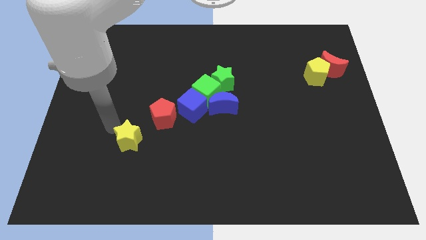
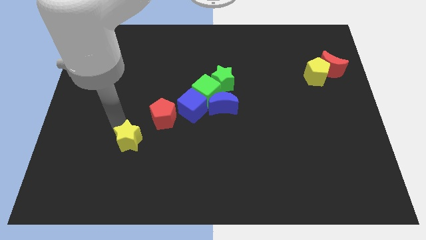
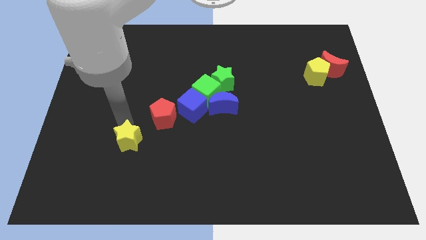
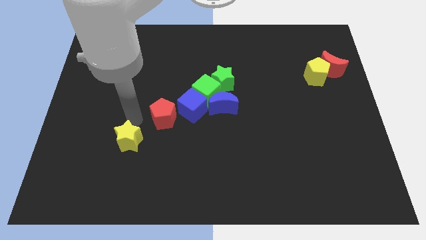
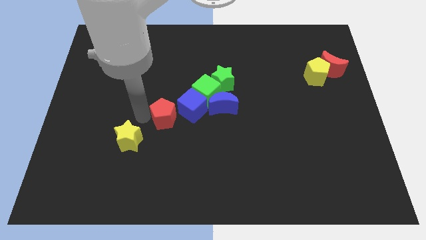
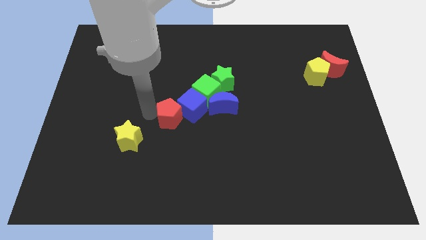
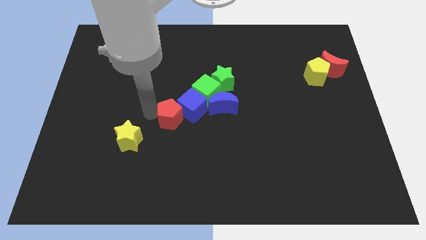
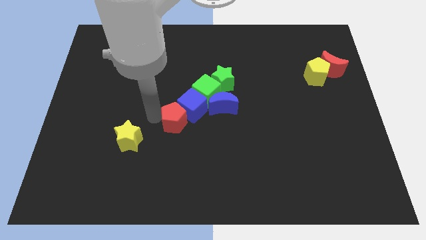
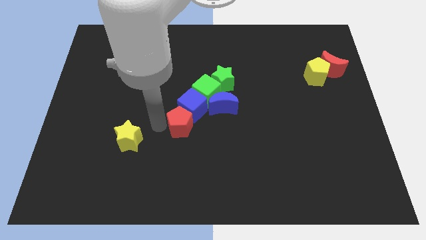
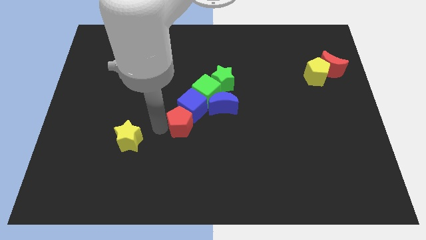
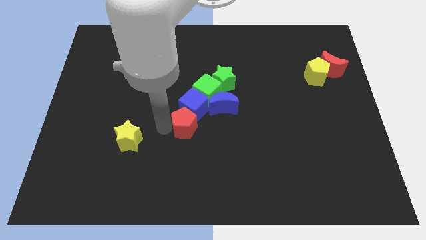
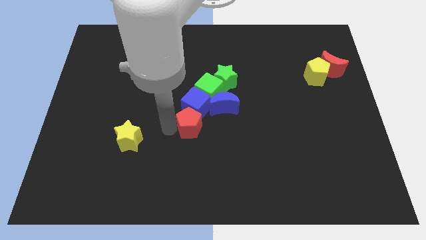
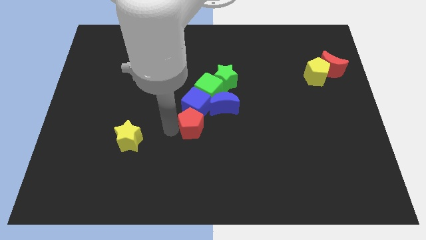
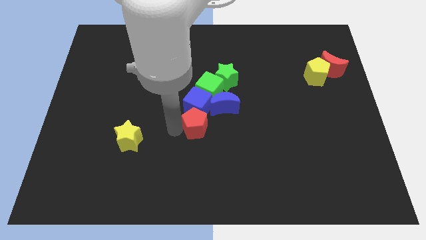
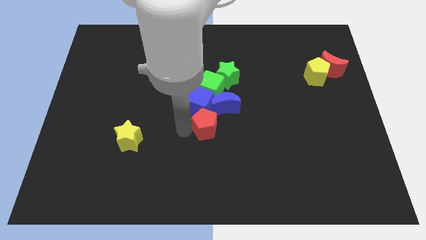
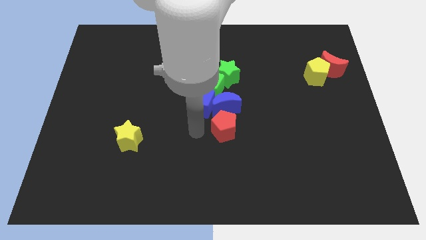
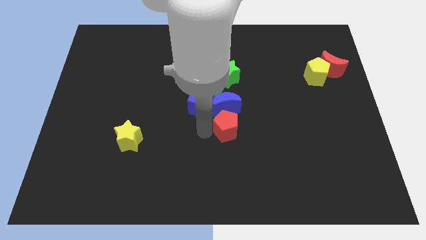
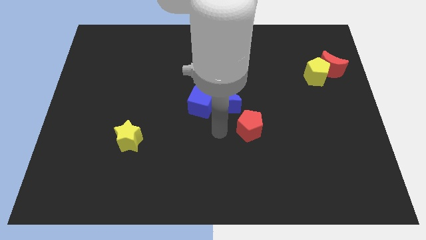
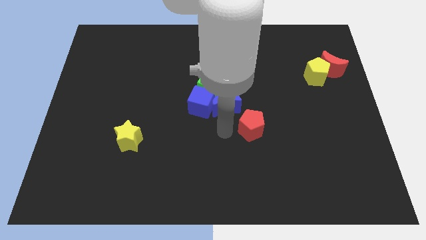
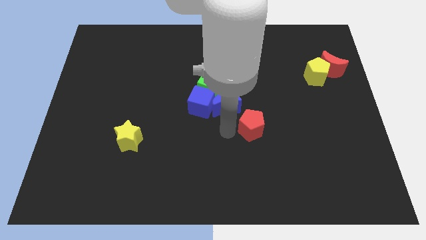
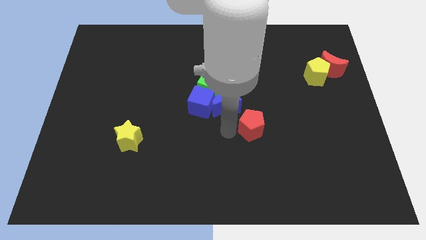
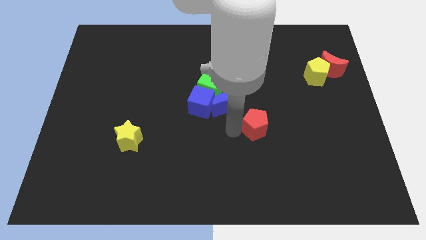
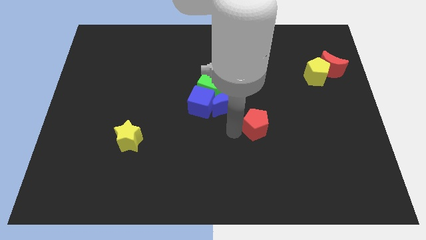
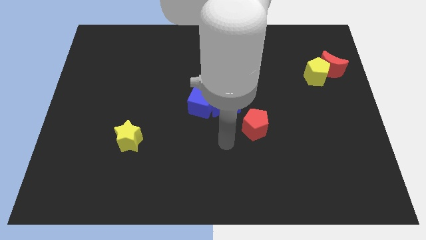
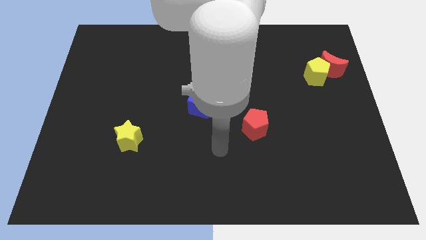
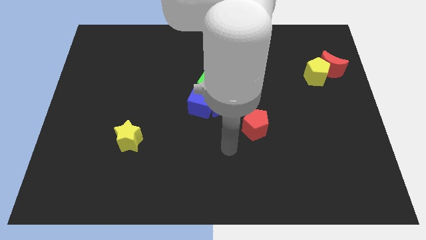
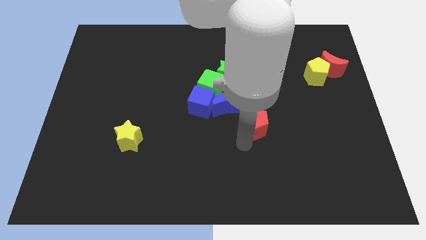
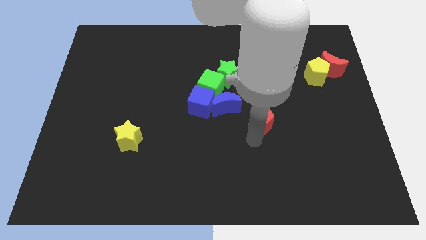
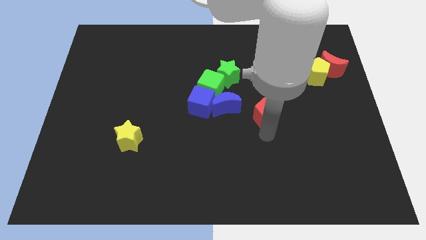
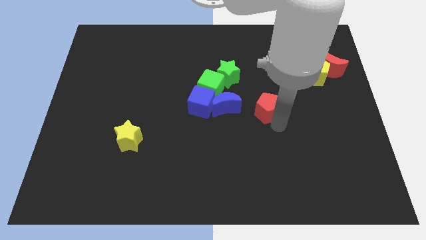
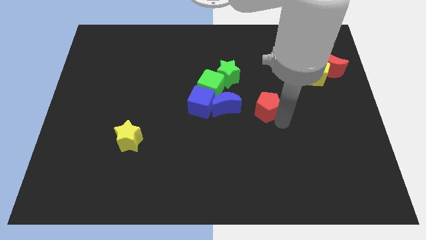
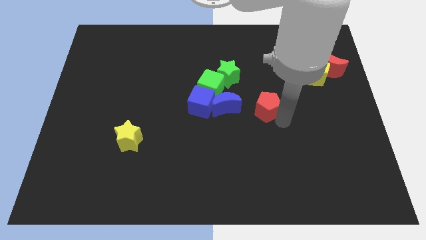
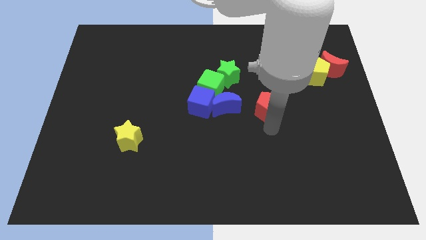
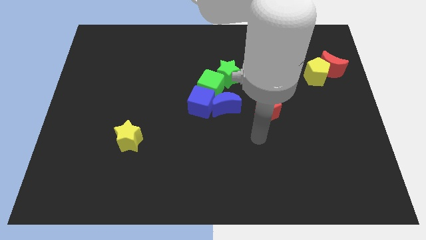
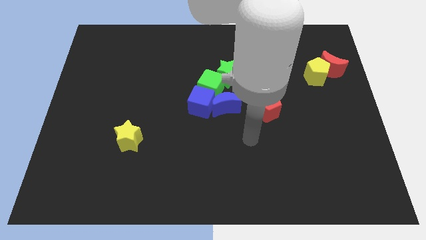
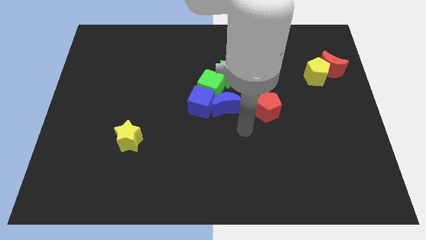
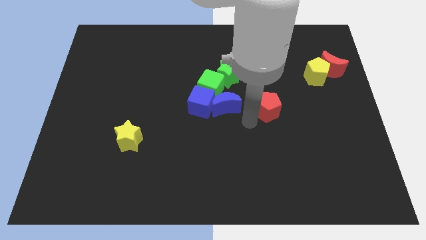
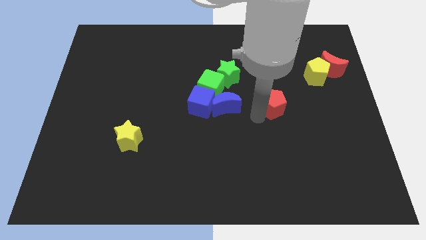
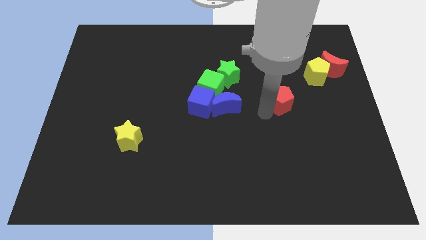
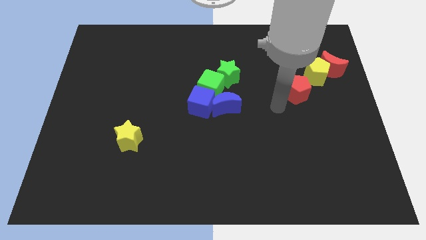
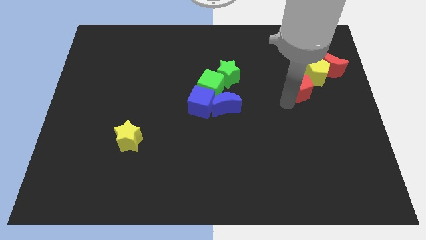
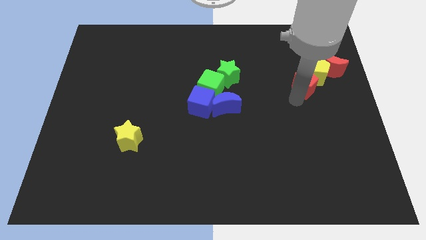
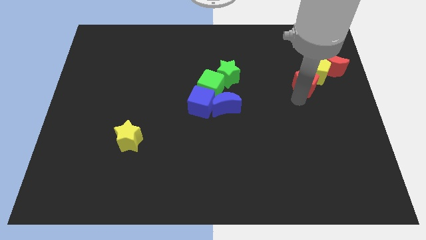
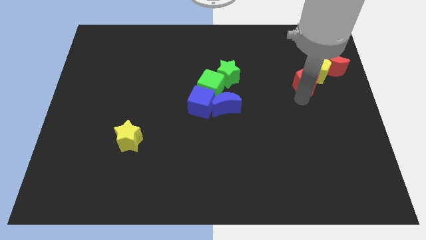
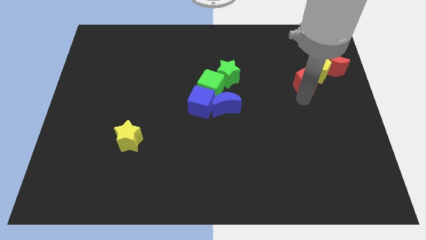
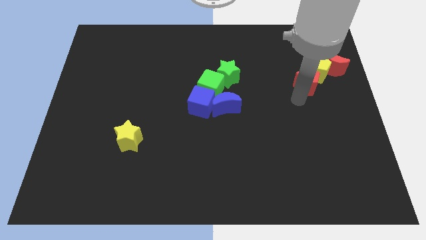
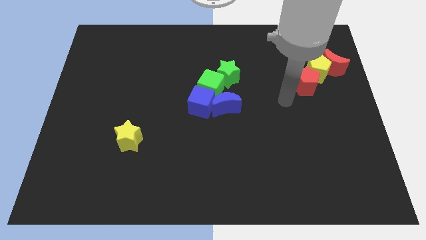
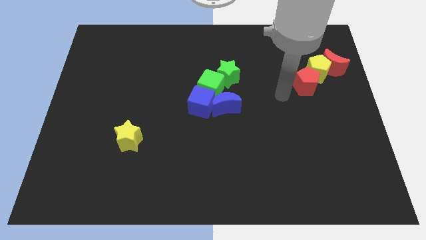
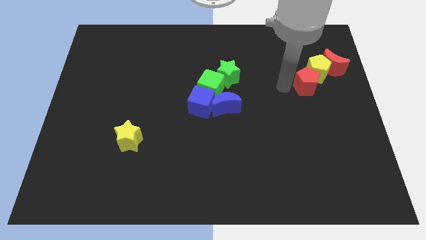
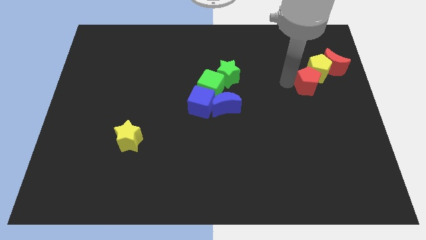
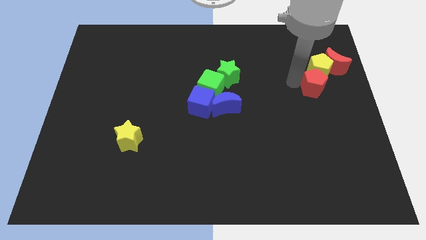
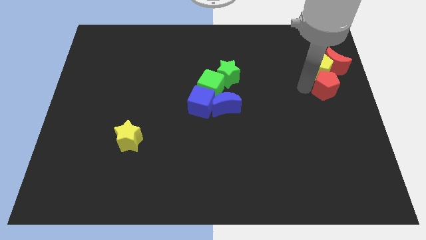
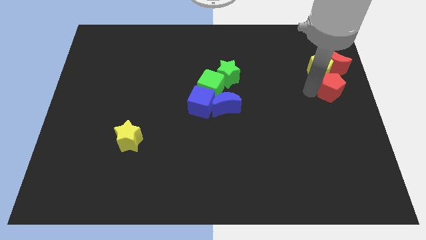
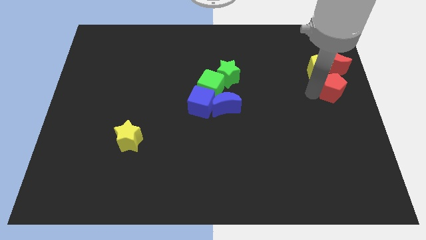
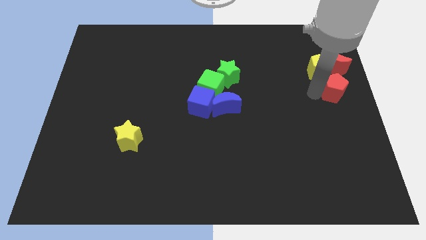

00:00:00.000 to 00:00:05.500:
place the red pentagon below the red crescent

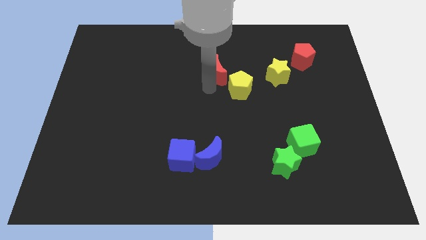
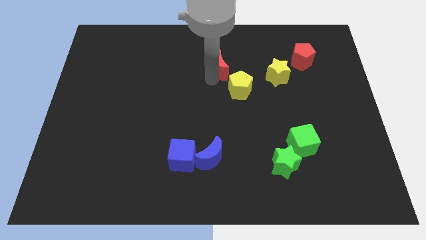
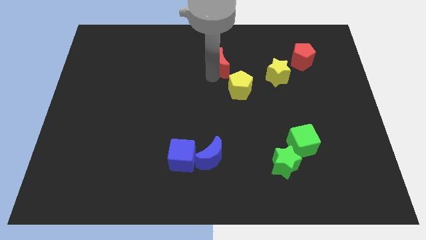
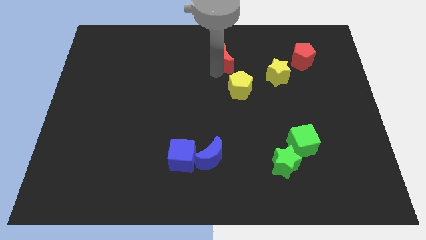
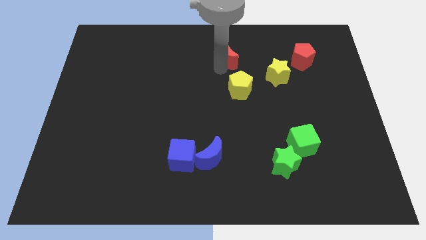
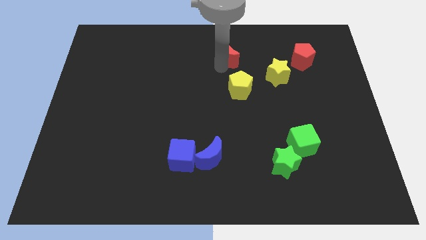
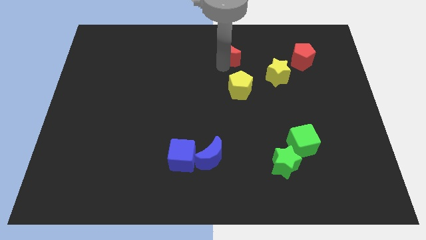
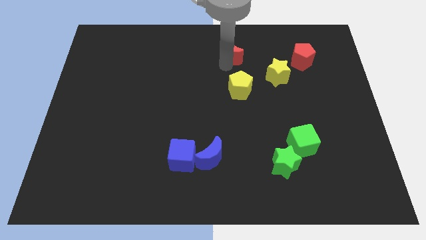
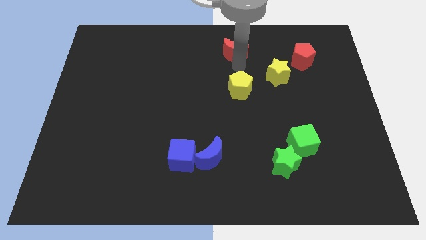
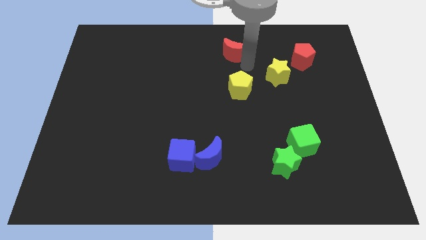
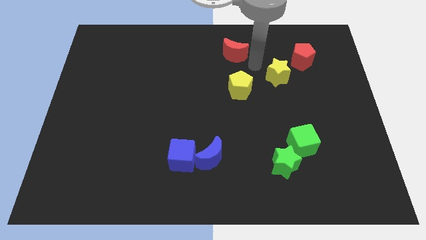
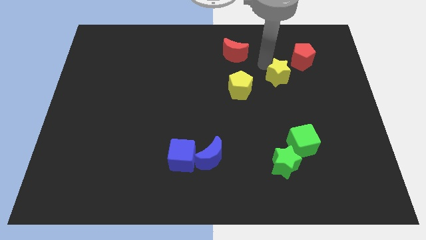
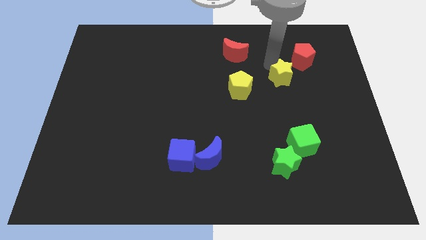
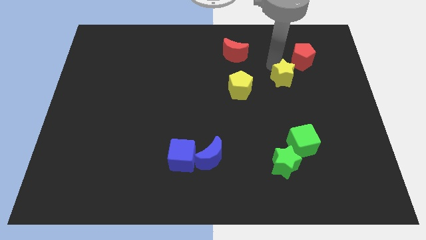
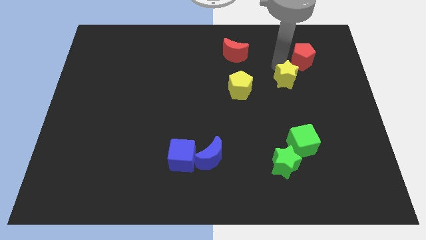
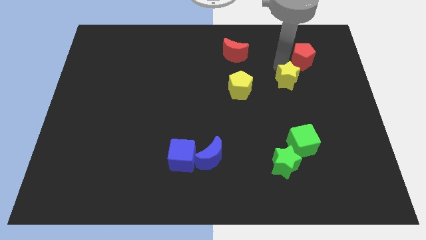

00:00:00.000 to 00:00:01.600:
move the red moon above the yellow penmtagon

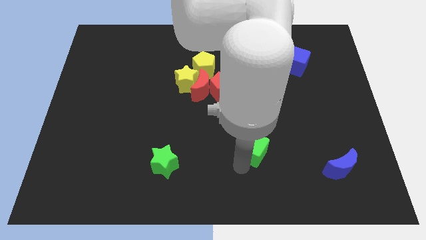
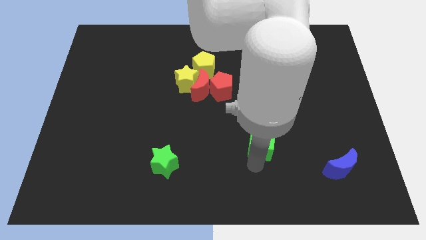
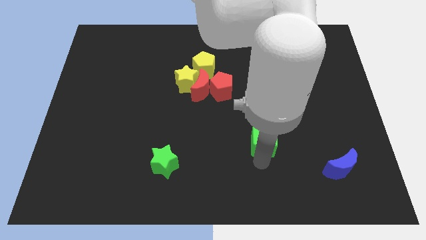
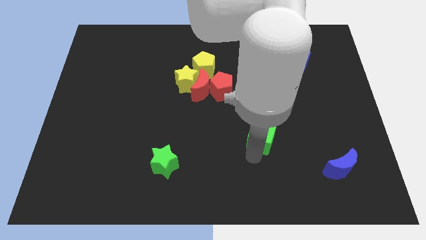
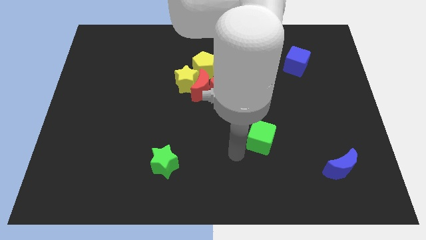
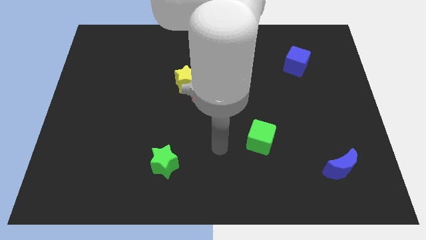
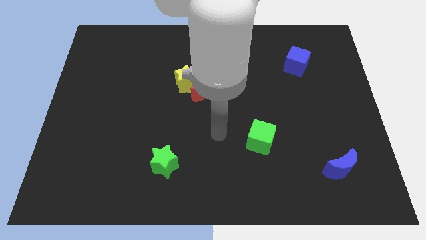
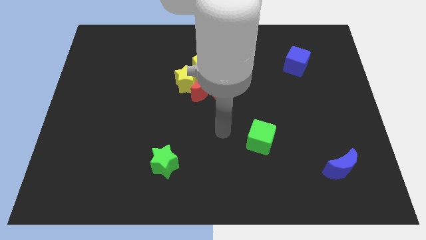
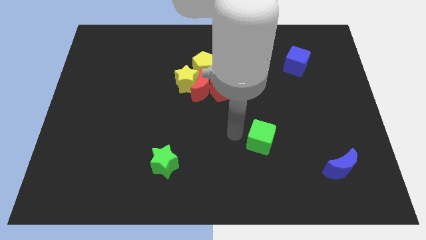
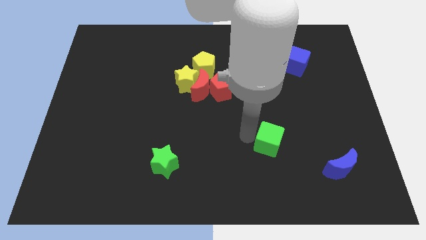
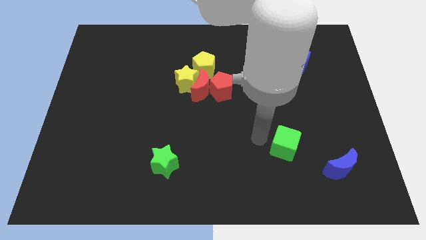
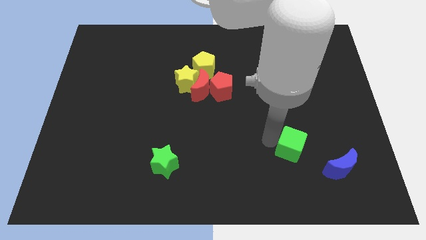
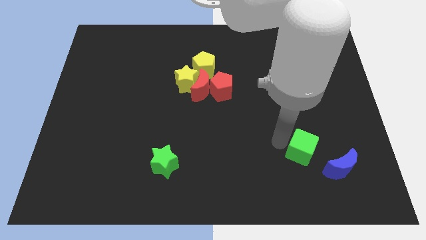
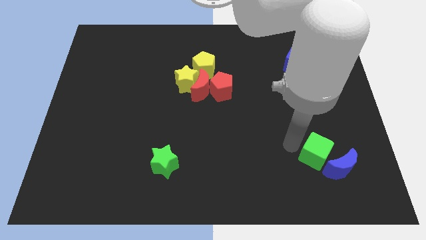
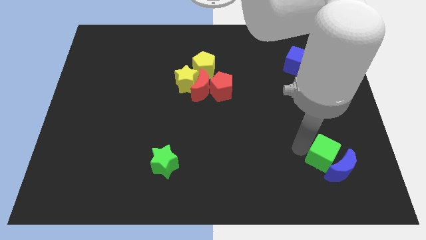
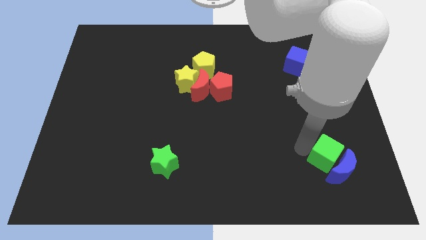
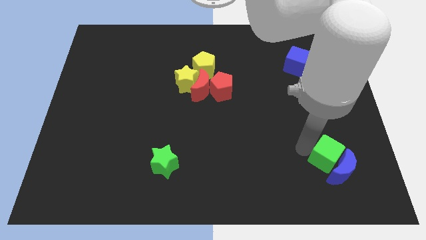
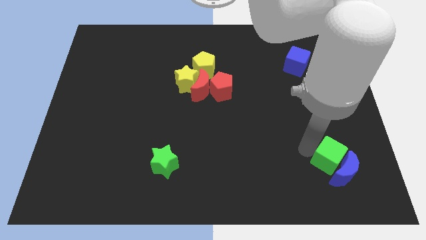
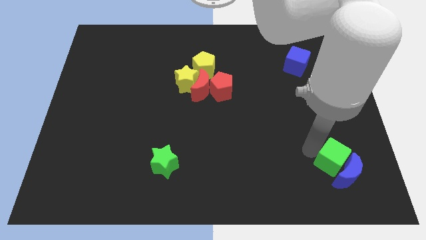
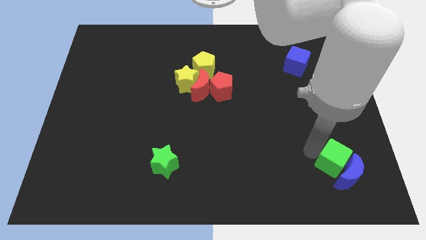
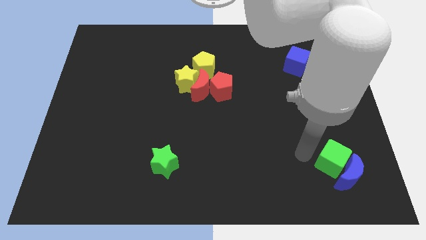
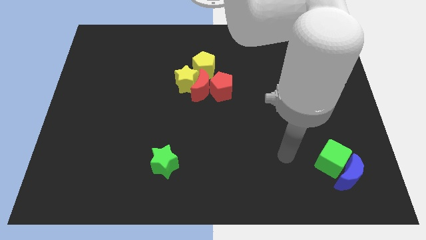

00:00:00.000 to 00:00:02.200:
push green cube above to the blue crescent
